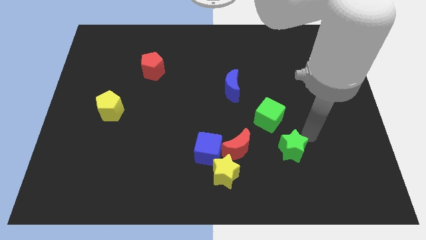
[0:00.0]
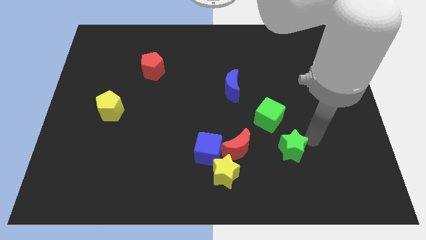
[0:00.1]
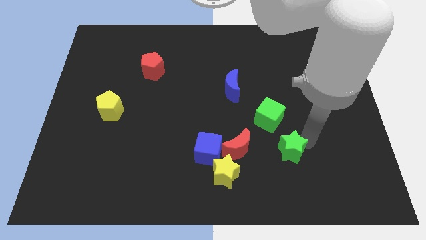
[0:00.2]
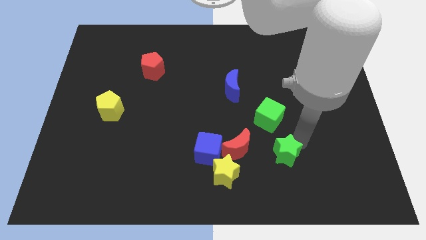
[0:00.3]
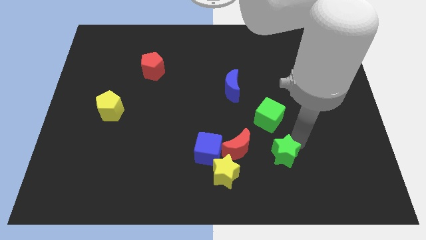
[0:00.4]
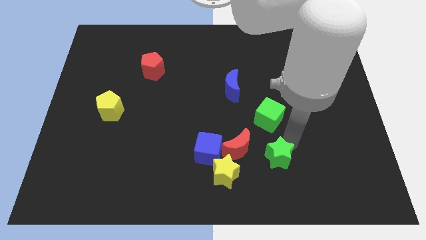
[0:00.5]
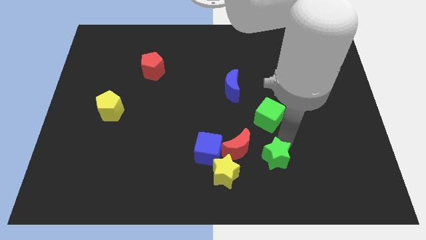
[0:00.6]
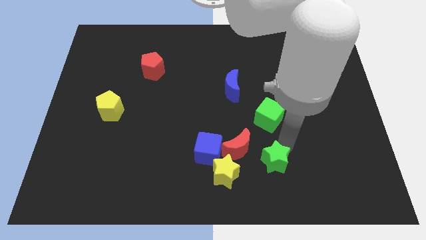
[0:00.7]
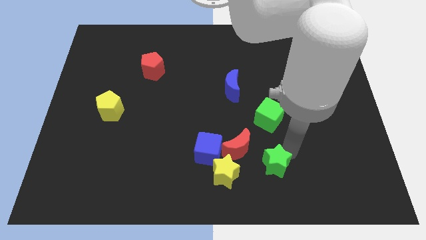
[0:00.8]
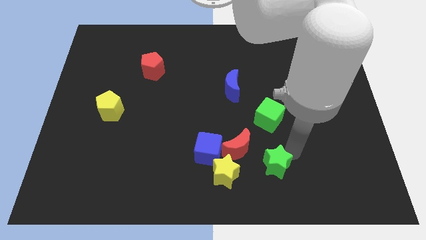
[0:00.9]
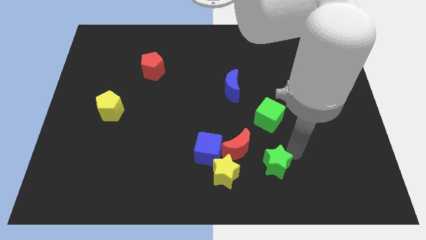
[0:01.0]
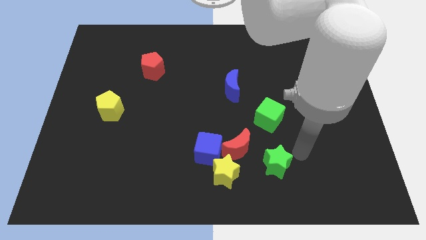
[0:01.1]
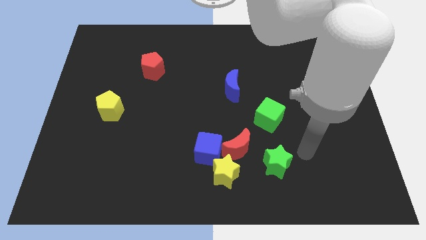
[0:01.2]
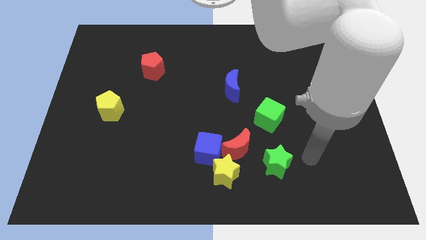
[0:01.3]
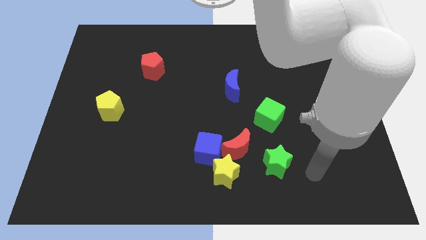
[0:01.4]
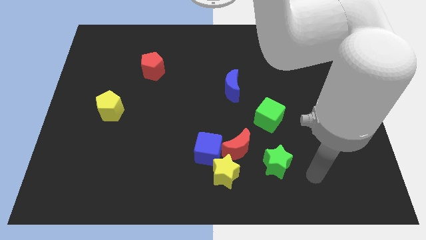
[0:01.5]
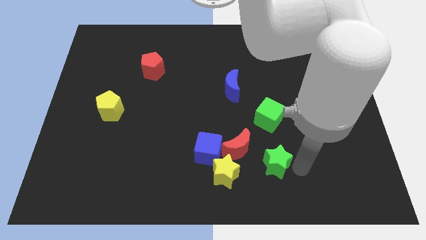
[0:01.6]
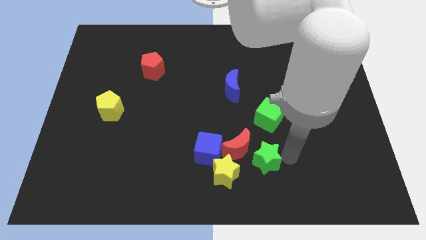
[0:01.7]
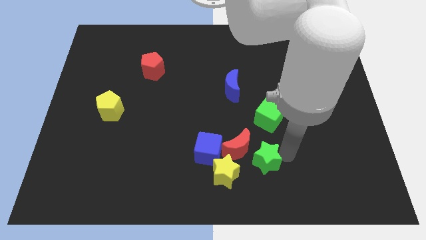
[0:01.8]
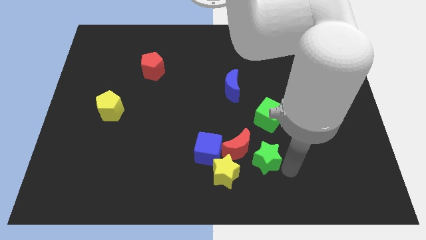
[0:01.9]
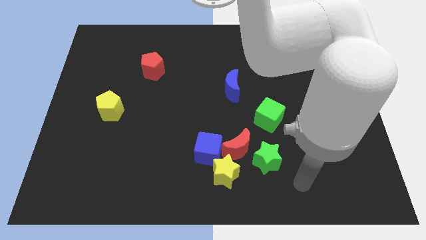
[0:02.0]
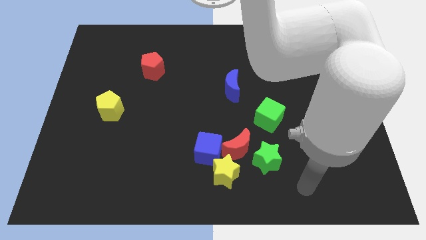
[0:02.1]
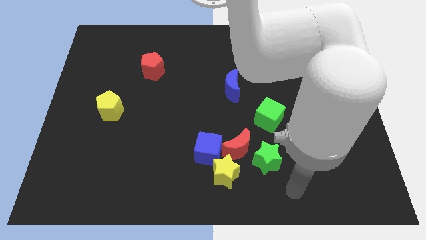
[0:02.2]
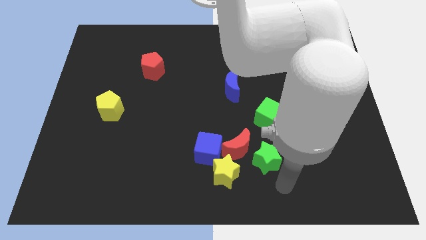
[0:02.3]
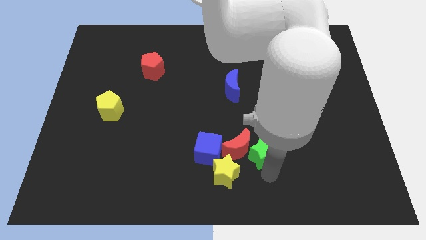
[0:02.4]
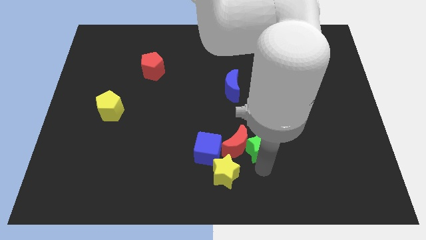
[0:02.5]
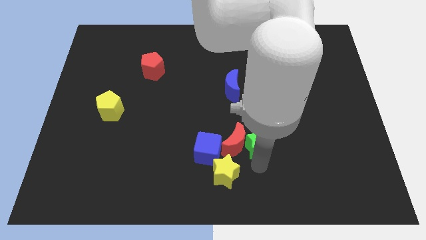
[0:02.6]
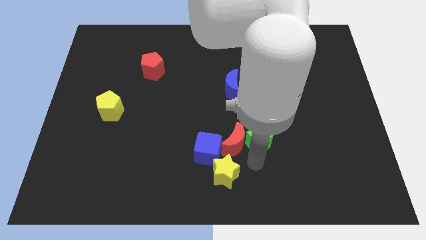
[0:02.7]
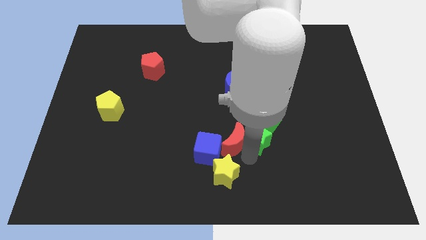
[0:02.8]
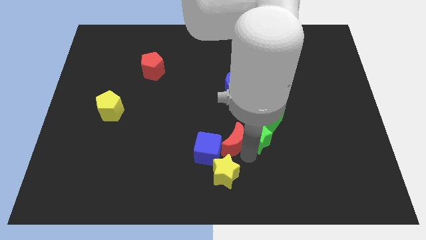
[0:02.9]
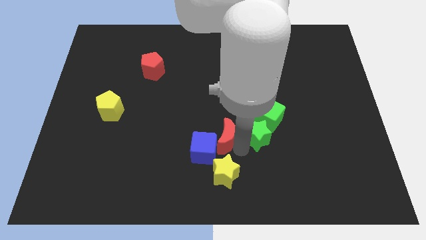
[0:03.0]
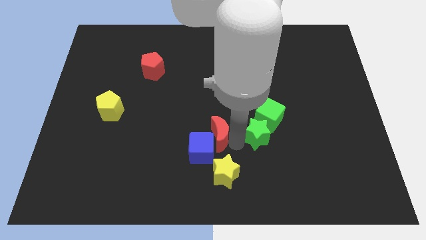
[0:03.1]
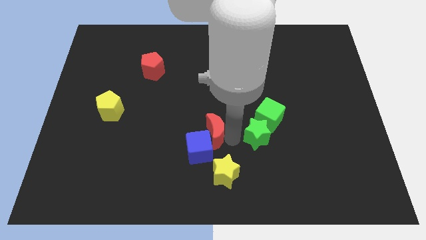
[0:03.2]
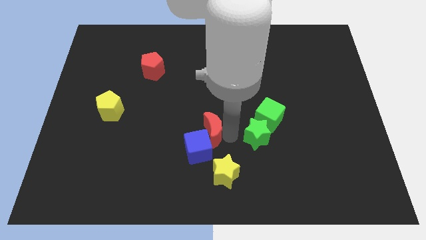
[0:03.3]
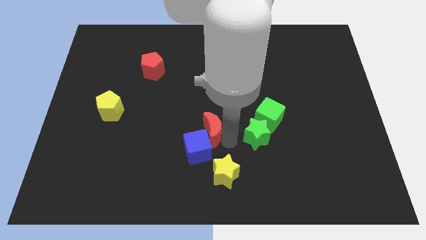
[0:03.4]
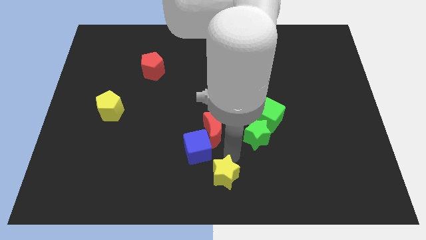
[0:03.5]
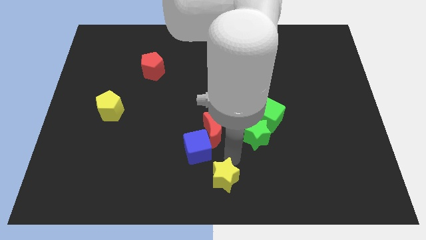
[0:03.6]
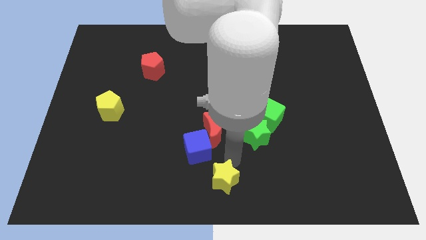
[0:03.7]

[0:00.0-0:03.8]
move the green star into the bottom side of the green cube

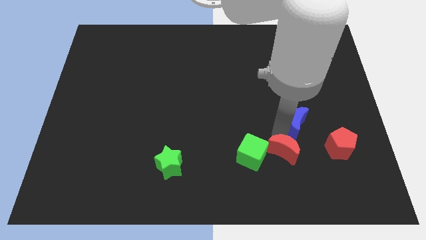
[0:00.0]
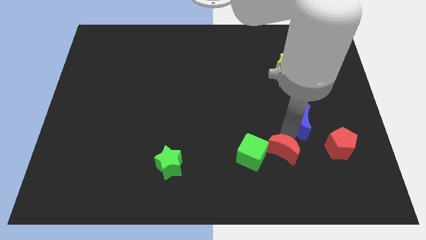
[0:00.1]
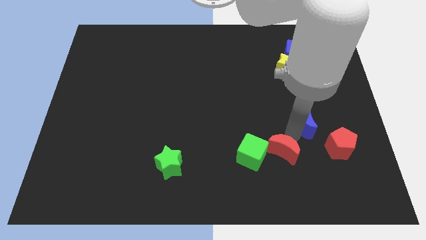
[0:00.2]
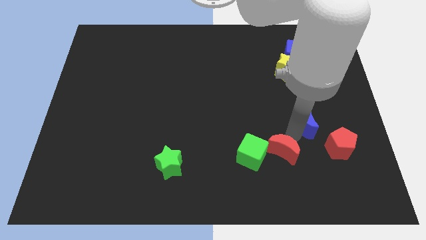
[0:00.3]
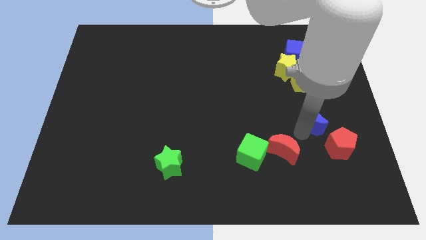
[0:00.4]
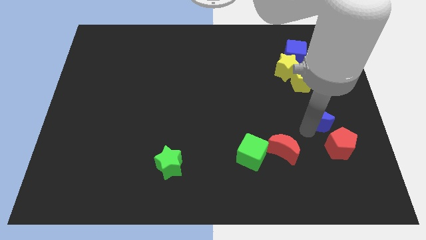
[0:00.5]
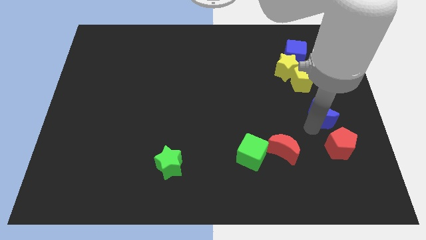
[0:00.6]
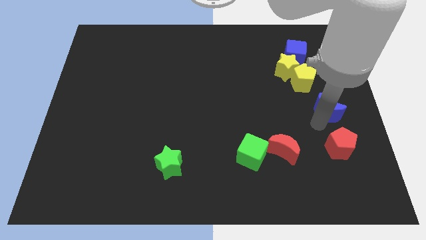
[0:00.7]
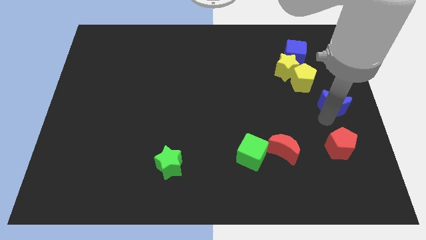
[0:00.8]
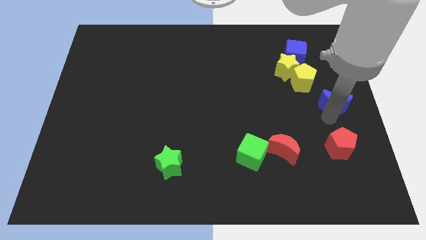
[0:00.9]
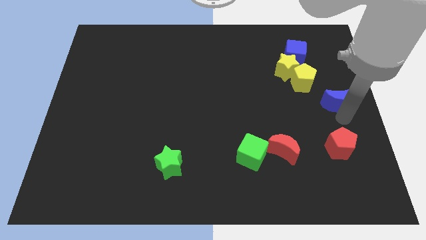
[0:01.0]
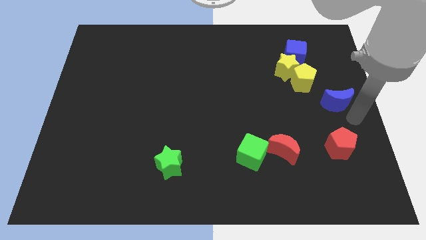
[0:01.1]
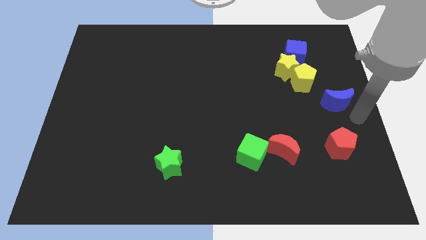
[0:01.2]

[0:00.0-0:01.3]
move the blue crescent to the top side of the red pentagon

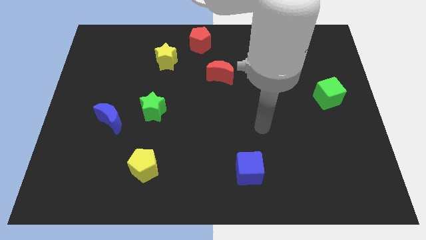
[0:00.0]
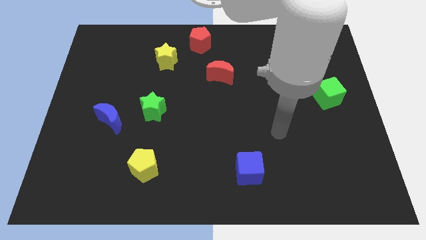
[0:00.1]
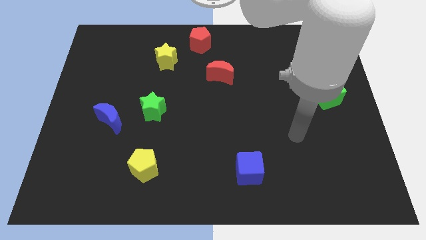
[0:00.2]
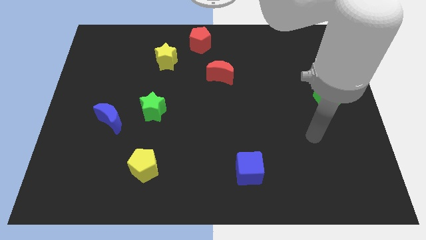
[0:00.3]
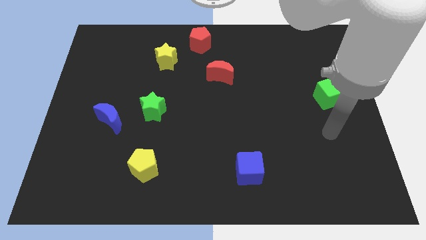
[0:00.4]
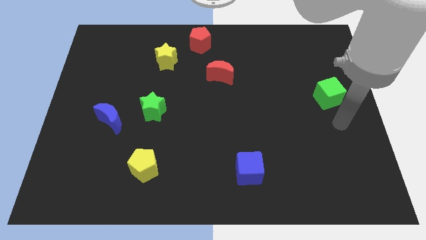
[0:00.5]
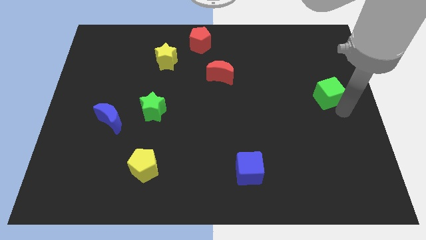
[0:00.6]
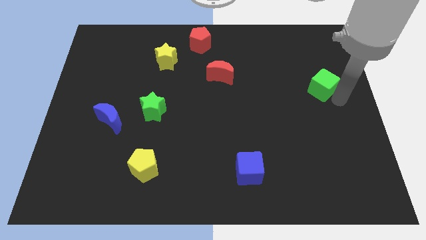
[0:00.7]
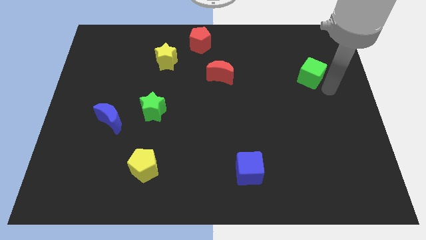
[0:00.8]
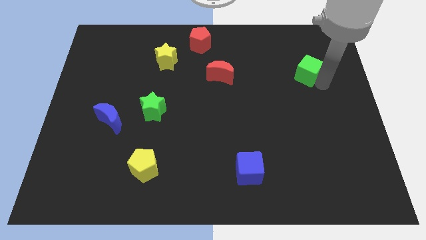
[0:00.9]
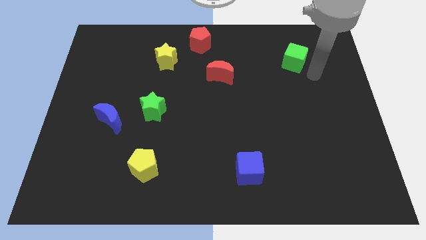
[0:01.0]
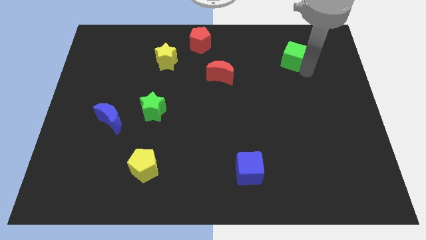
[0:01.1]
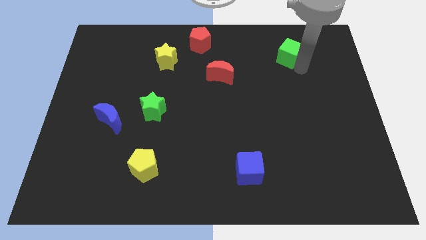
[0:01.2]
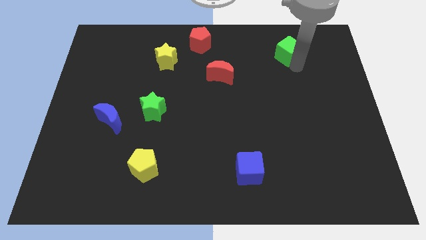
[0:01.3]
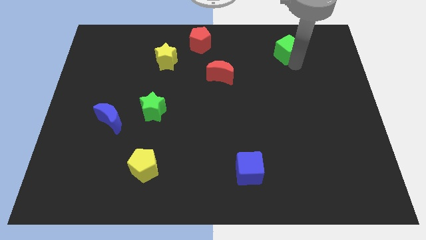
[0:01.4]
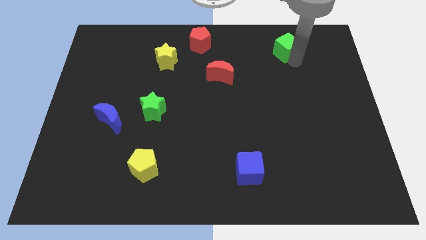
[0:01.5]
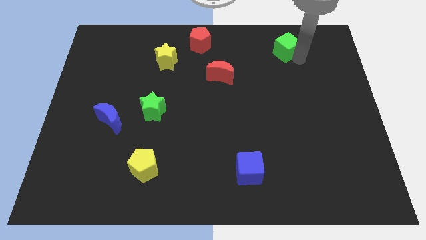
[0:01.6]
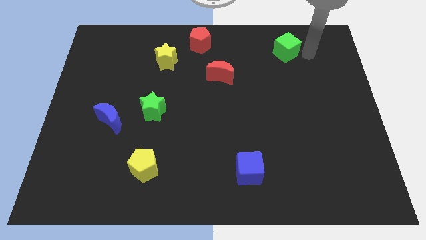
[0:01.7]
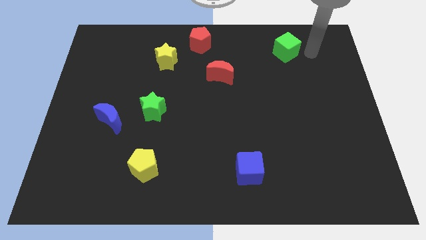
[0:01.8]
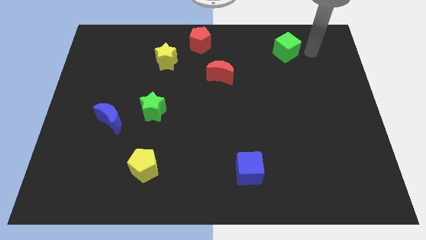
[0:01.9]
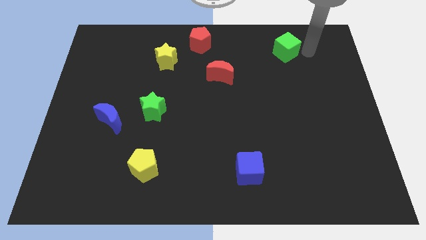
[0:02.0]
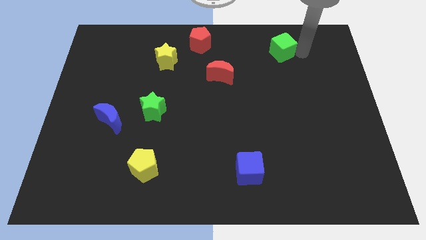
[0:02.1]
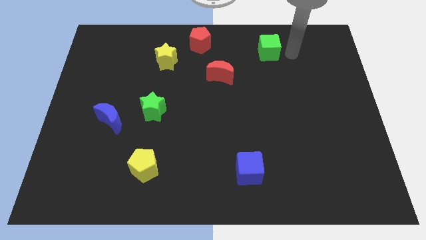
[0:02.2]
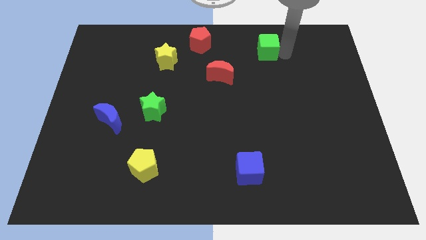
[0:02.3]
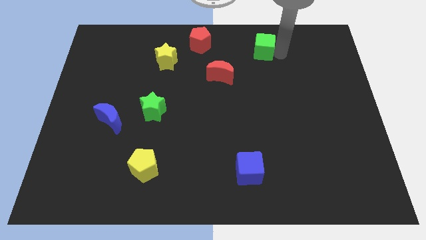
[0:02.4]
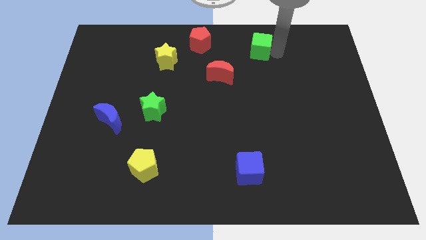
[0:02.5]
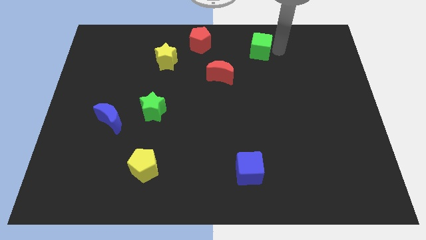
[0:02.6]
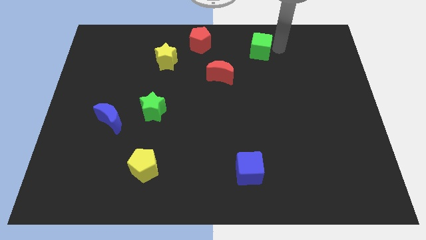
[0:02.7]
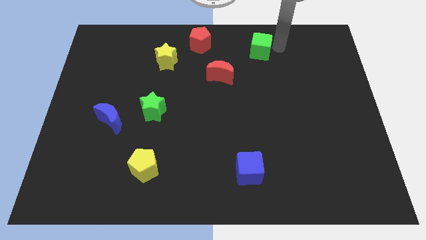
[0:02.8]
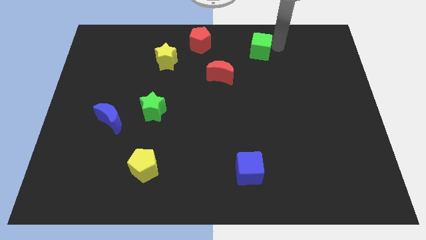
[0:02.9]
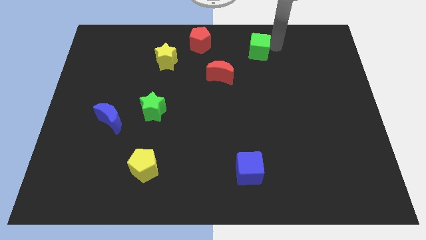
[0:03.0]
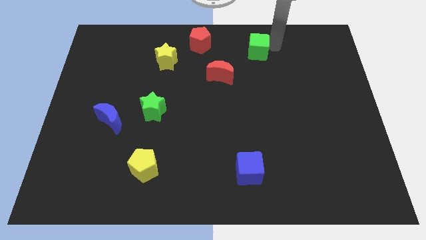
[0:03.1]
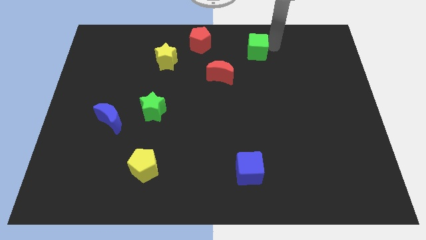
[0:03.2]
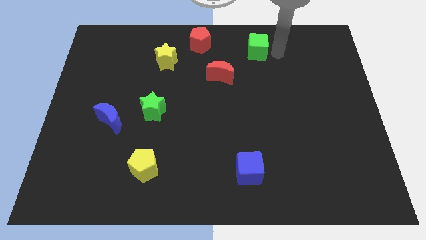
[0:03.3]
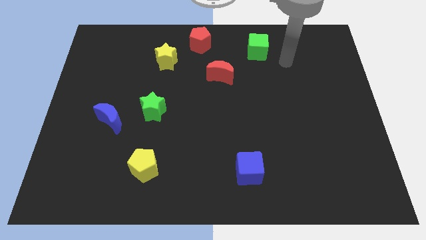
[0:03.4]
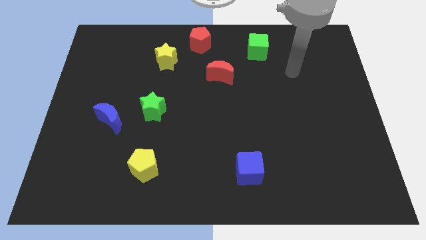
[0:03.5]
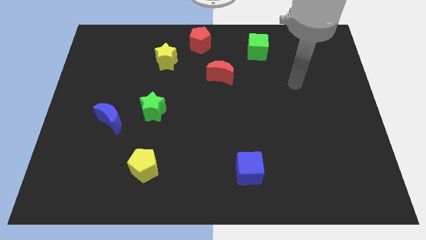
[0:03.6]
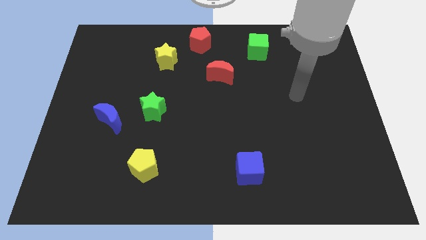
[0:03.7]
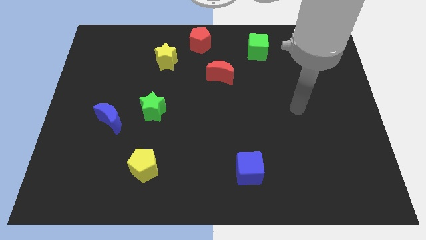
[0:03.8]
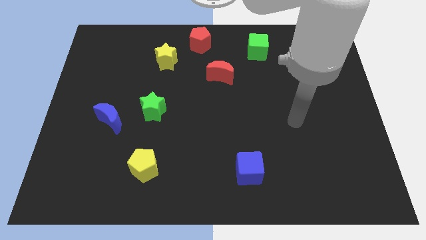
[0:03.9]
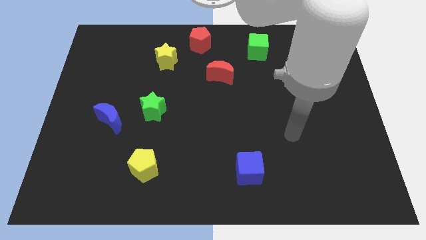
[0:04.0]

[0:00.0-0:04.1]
place the green cube diagonally to the top right side of the red pentagon
